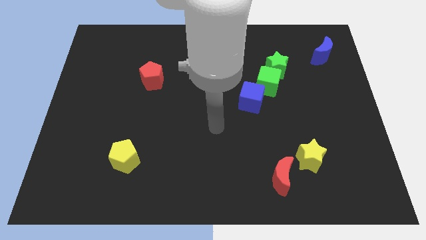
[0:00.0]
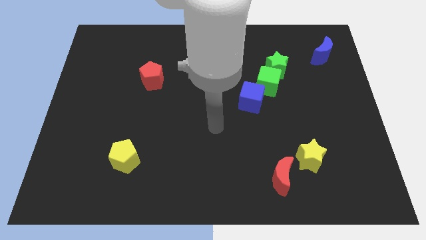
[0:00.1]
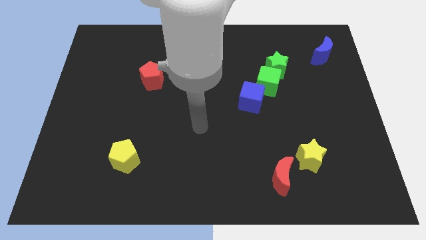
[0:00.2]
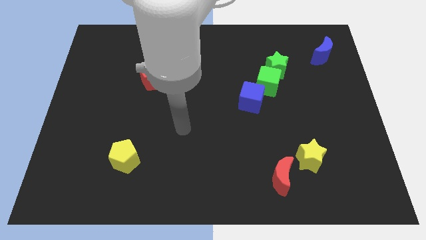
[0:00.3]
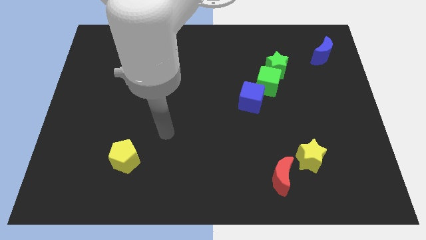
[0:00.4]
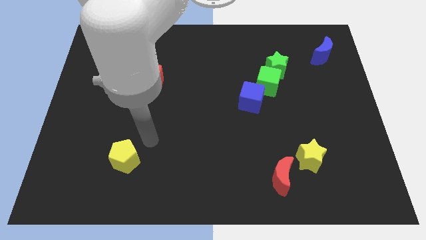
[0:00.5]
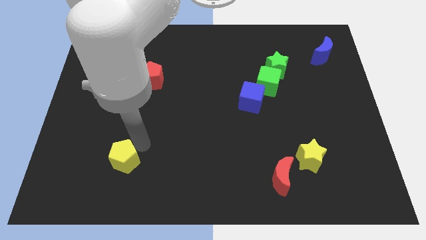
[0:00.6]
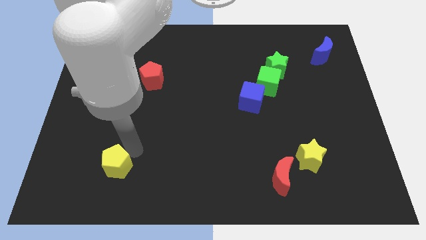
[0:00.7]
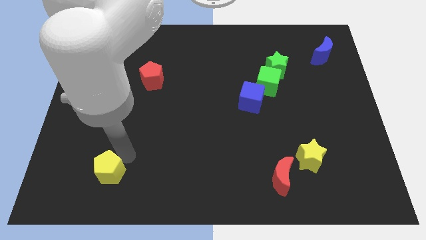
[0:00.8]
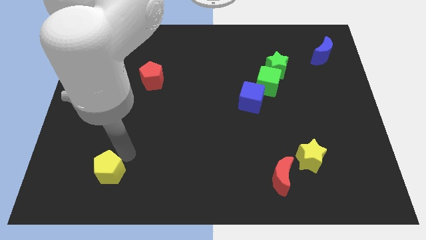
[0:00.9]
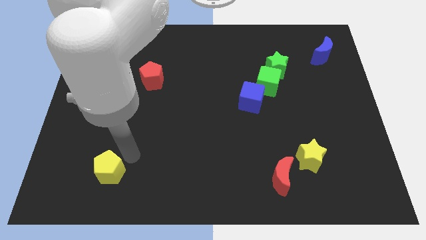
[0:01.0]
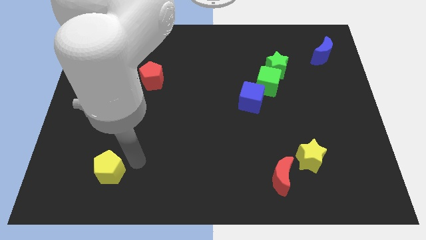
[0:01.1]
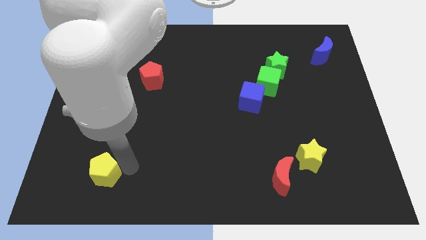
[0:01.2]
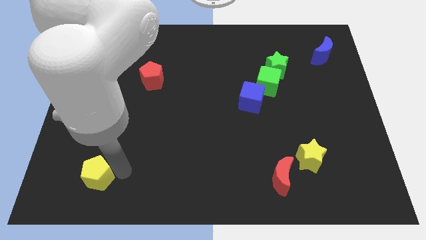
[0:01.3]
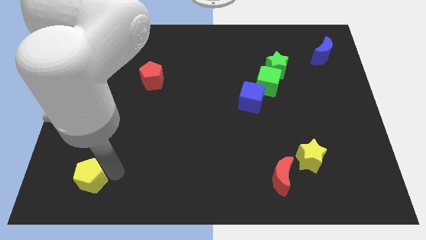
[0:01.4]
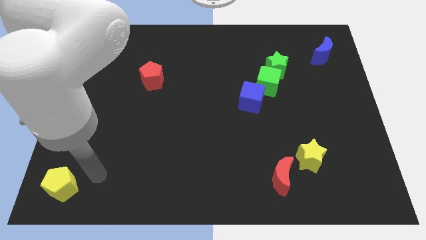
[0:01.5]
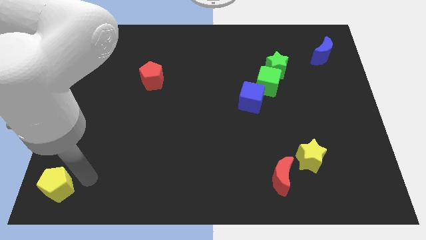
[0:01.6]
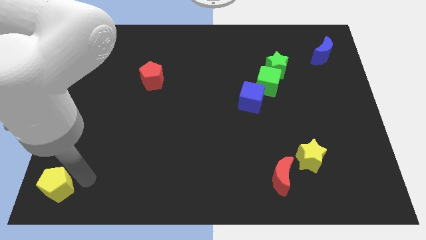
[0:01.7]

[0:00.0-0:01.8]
move the yellow pentagon to the bottom left side of the table

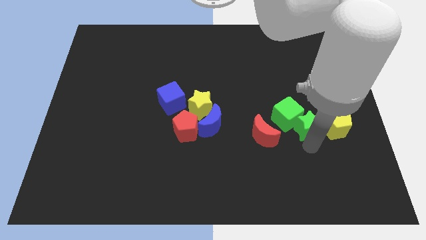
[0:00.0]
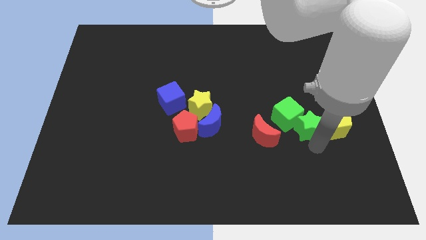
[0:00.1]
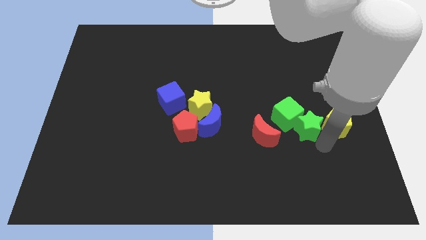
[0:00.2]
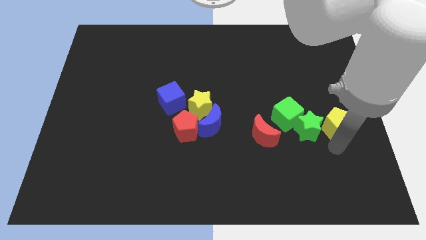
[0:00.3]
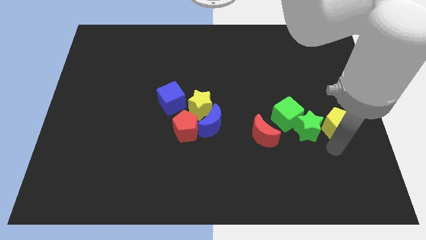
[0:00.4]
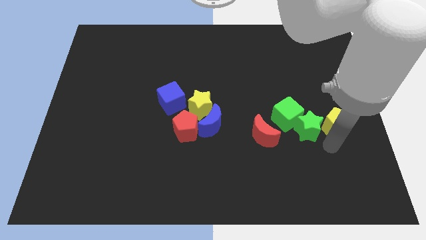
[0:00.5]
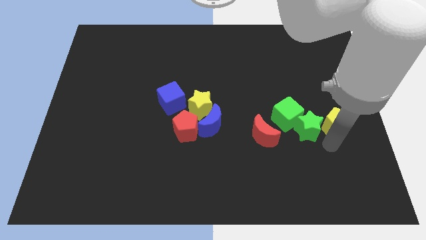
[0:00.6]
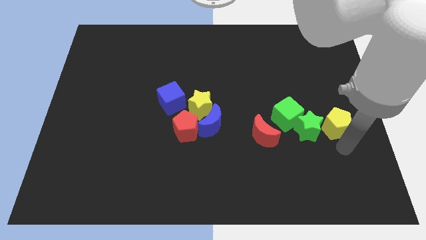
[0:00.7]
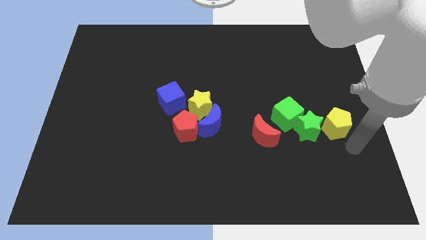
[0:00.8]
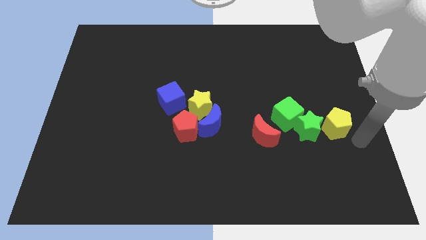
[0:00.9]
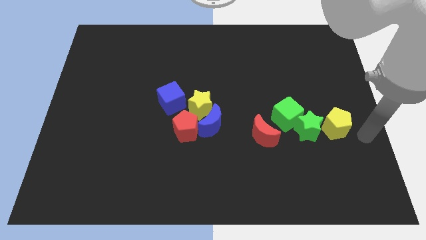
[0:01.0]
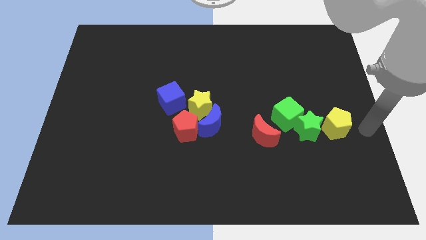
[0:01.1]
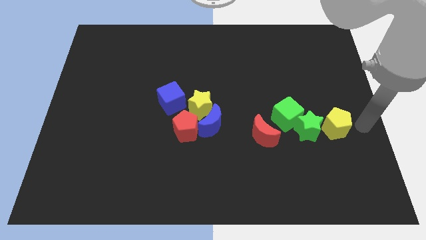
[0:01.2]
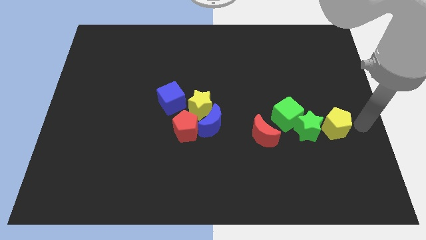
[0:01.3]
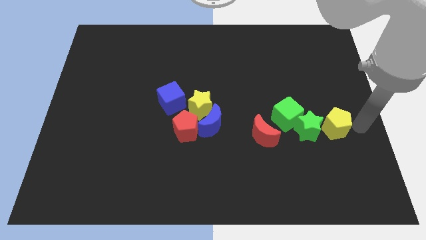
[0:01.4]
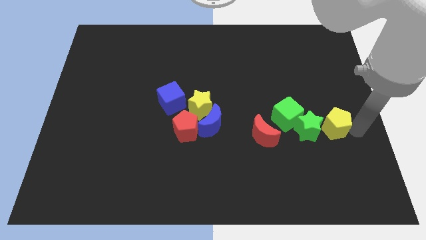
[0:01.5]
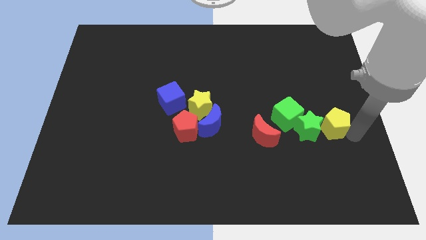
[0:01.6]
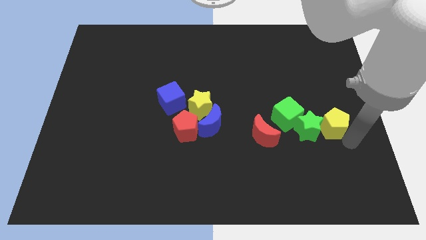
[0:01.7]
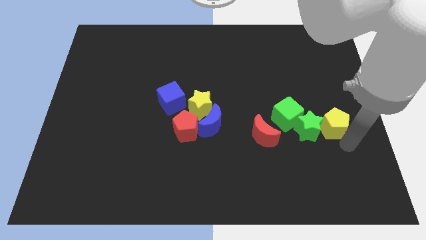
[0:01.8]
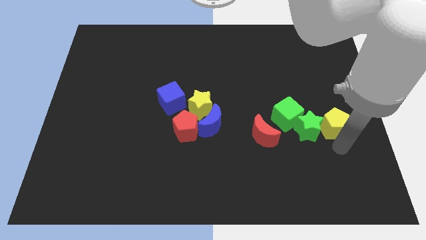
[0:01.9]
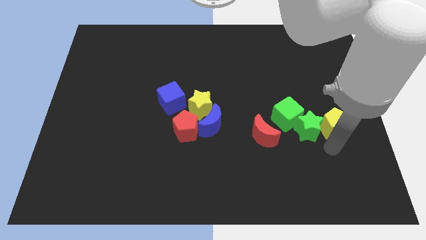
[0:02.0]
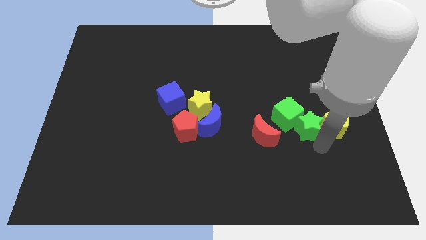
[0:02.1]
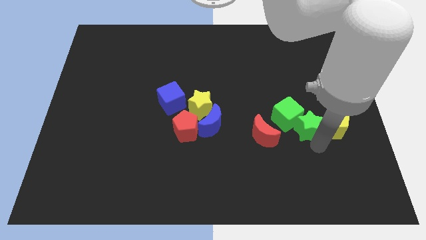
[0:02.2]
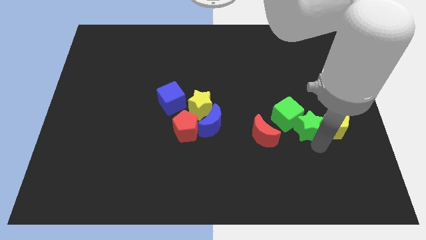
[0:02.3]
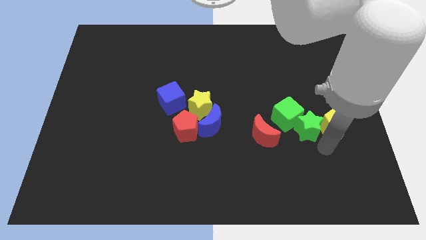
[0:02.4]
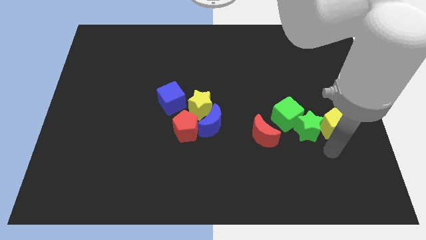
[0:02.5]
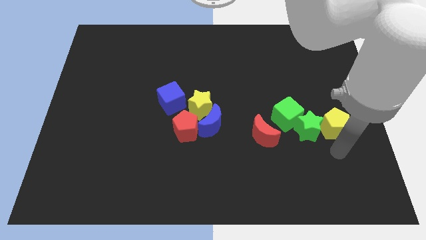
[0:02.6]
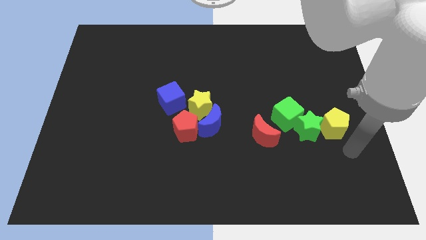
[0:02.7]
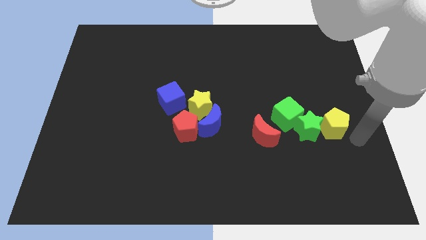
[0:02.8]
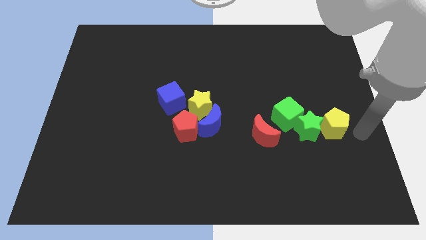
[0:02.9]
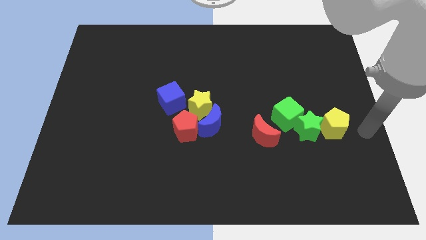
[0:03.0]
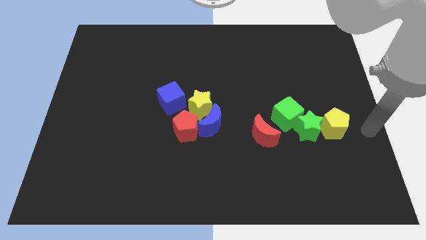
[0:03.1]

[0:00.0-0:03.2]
slightly push the yellow pentagon into green star

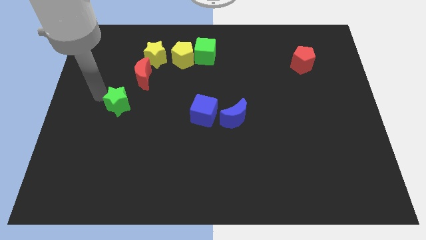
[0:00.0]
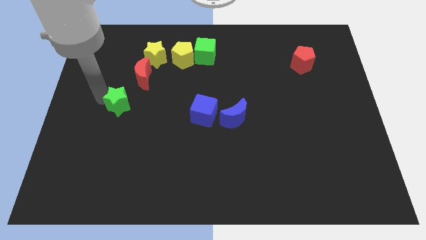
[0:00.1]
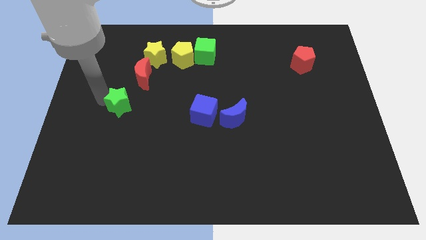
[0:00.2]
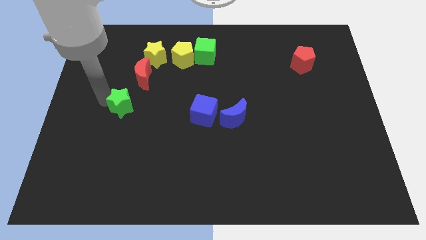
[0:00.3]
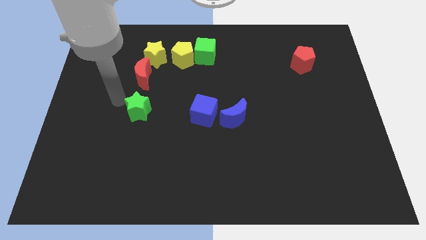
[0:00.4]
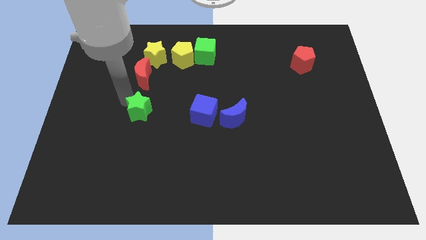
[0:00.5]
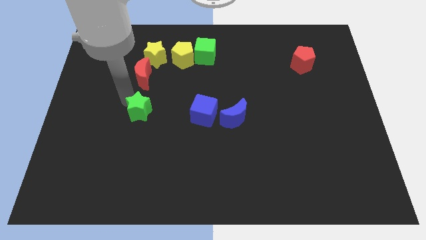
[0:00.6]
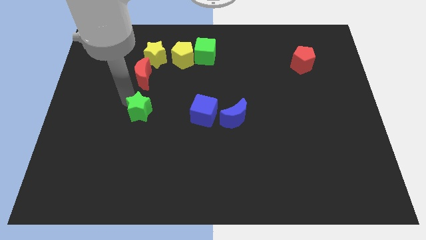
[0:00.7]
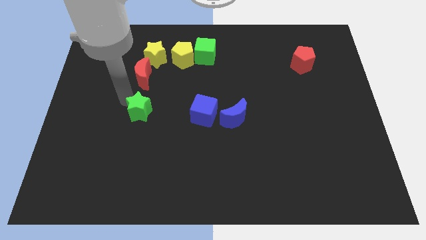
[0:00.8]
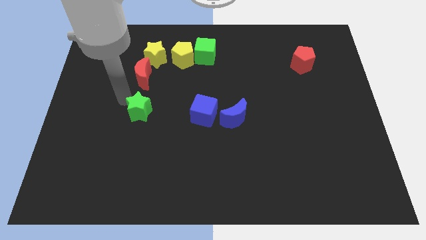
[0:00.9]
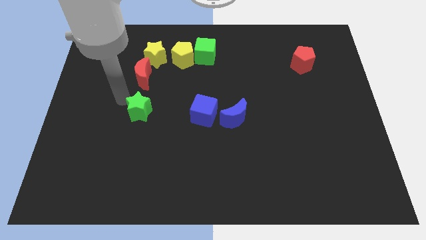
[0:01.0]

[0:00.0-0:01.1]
move the green star slightly down to the right

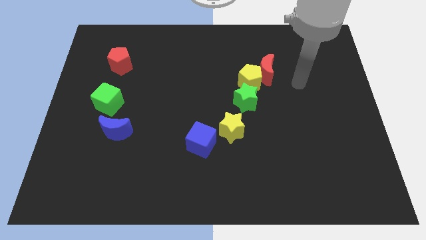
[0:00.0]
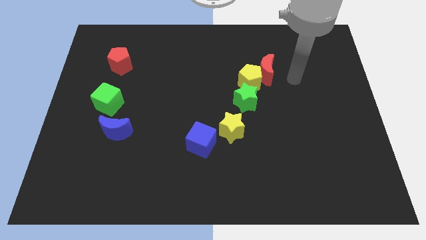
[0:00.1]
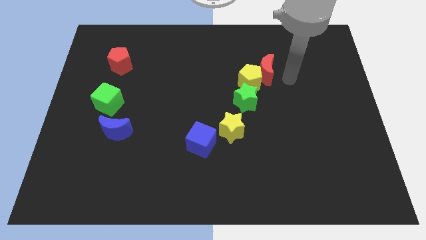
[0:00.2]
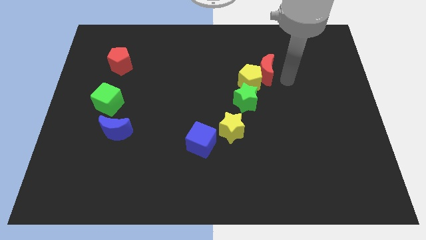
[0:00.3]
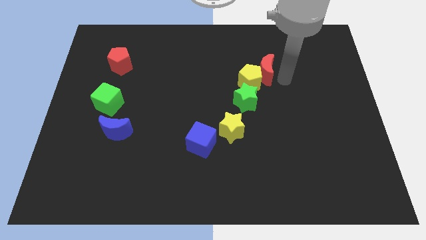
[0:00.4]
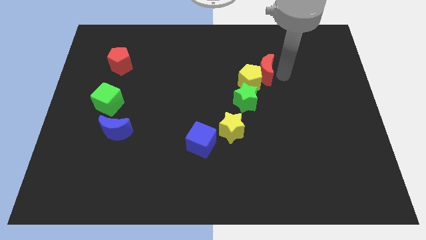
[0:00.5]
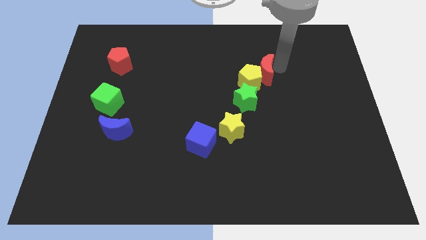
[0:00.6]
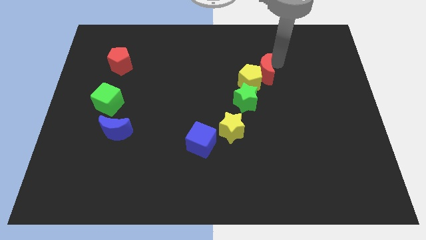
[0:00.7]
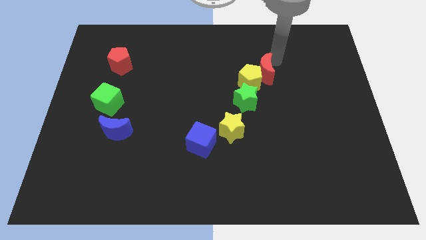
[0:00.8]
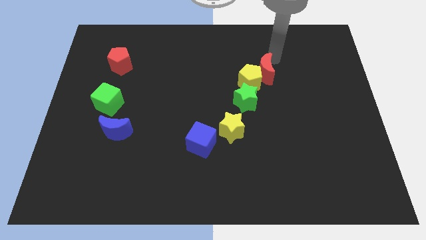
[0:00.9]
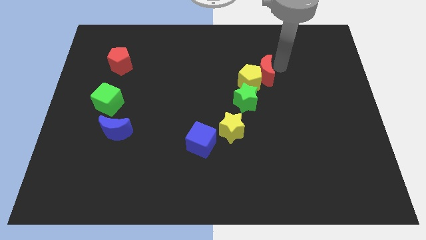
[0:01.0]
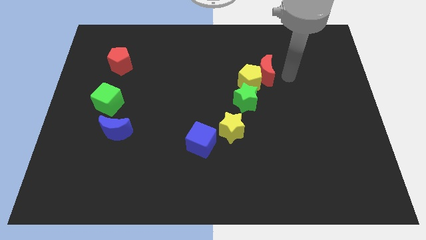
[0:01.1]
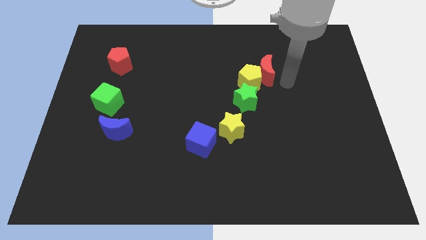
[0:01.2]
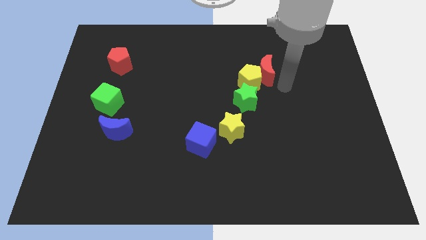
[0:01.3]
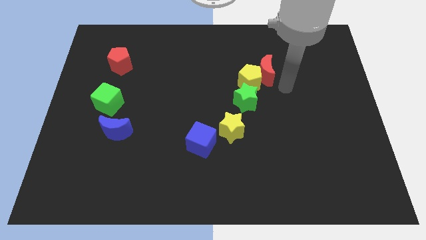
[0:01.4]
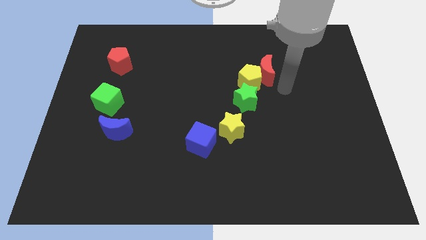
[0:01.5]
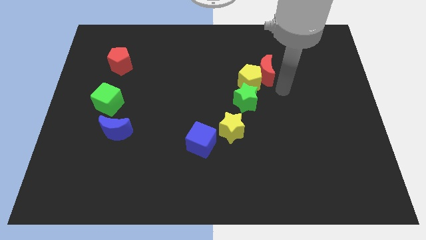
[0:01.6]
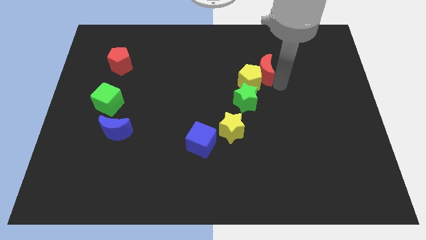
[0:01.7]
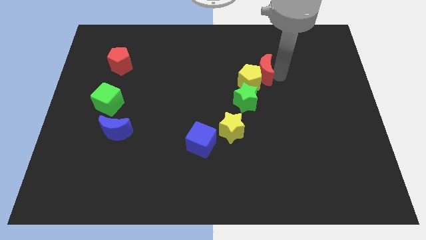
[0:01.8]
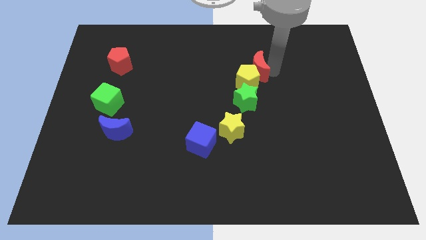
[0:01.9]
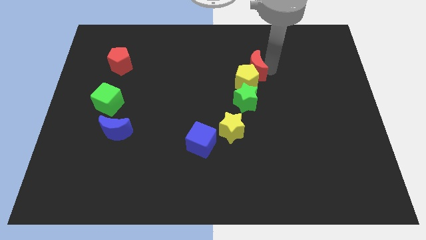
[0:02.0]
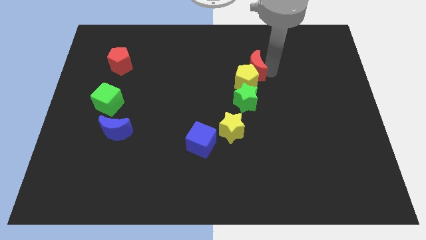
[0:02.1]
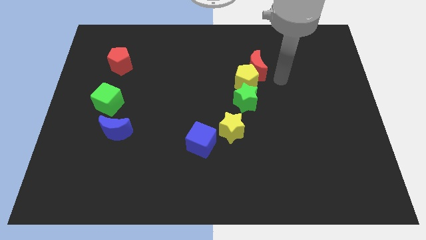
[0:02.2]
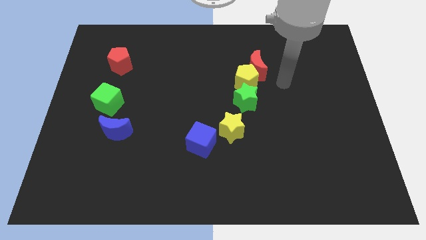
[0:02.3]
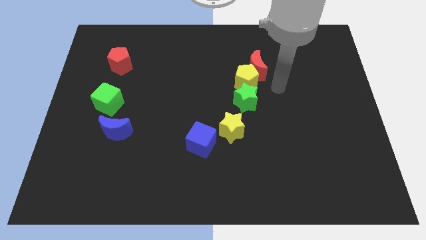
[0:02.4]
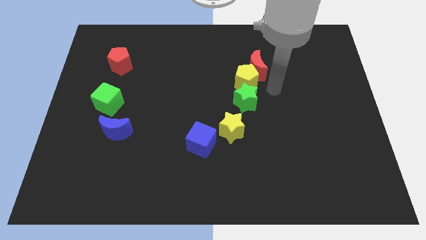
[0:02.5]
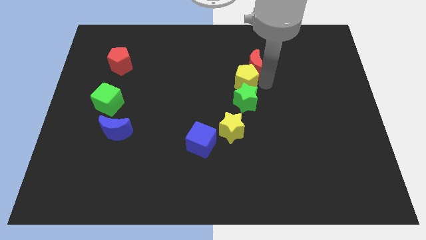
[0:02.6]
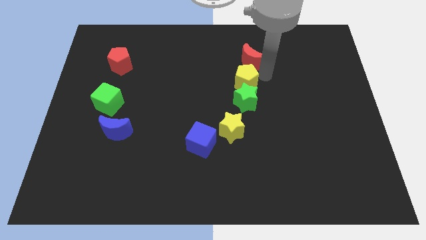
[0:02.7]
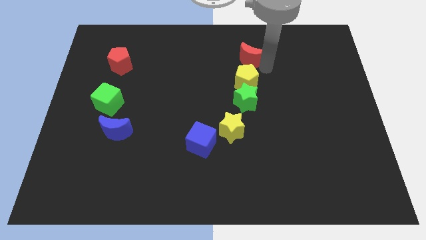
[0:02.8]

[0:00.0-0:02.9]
move the red crescent above to the yellow pentagon
